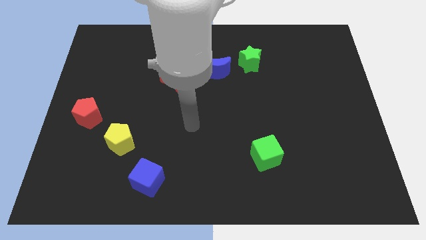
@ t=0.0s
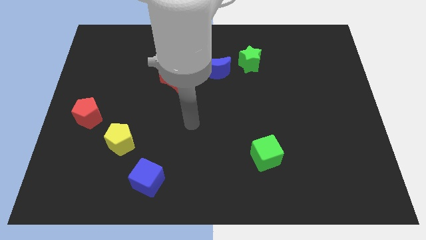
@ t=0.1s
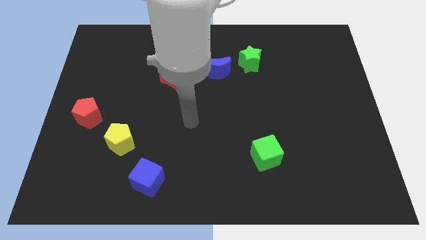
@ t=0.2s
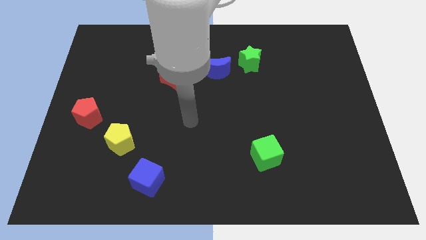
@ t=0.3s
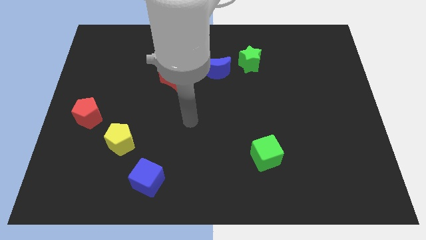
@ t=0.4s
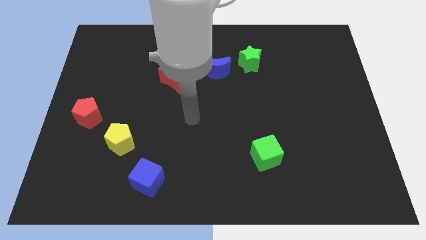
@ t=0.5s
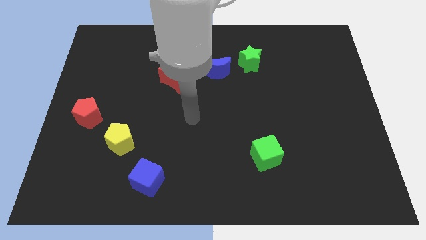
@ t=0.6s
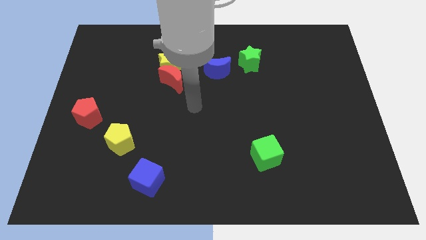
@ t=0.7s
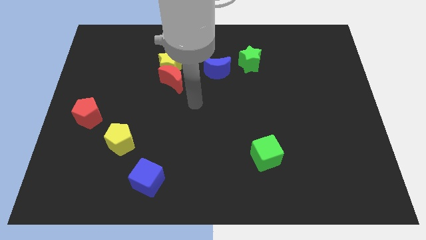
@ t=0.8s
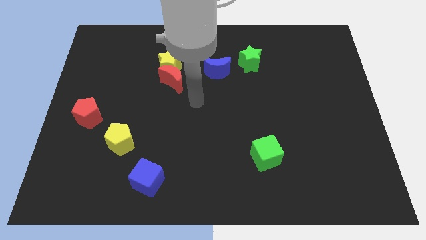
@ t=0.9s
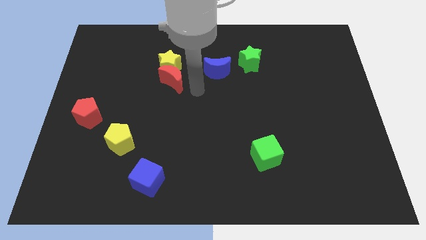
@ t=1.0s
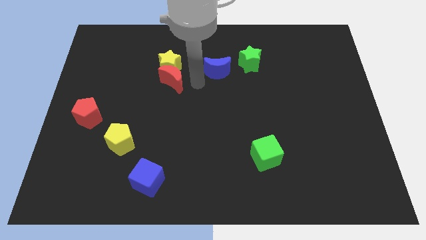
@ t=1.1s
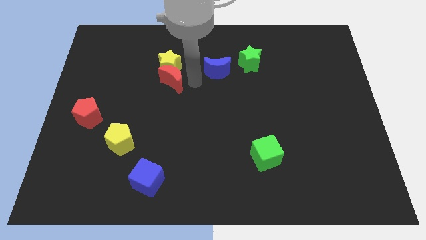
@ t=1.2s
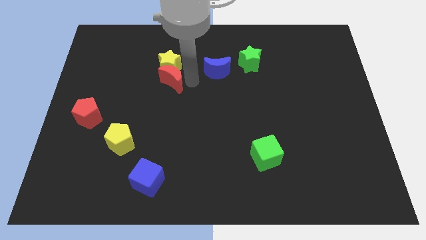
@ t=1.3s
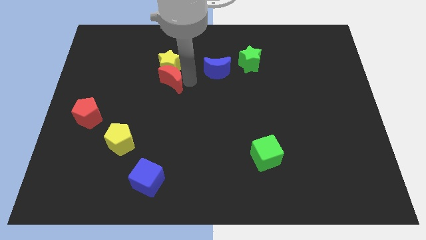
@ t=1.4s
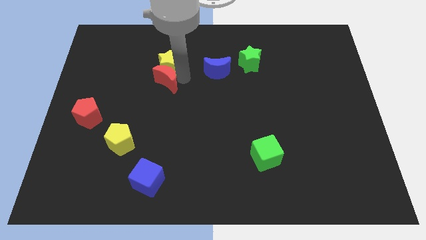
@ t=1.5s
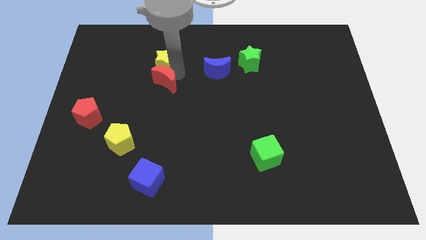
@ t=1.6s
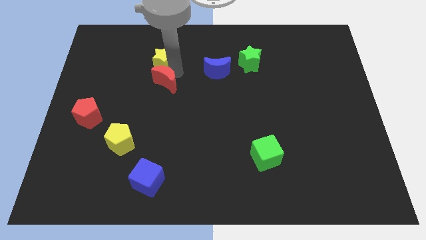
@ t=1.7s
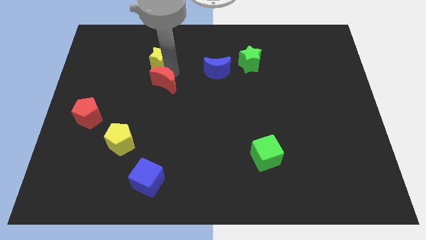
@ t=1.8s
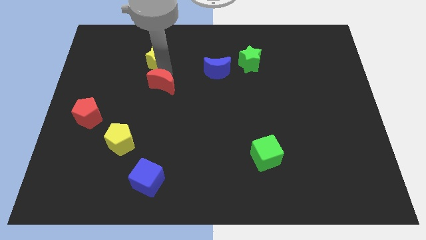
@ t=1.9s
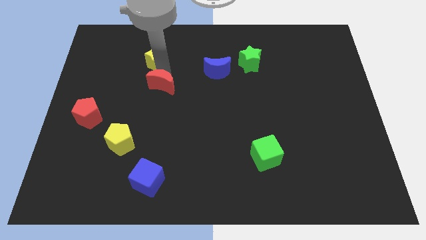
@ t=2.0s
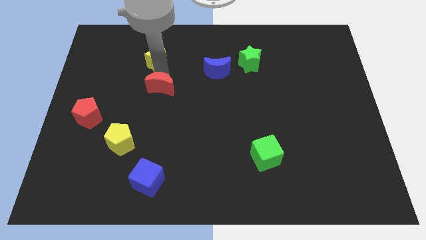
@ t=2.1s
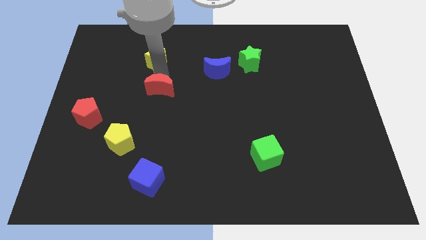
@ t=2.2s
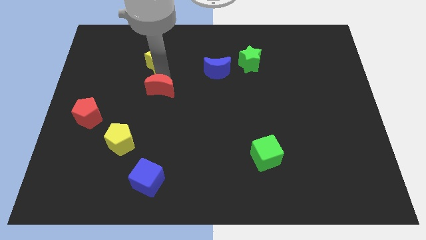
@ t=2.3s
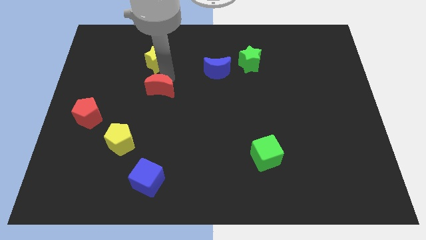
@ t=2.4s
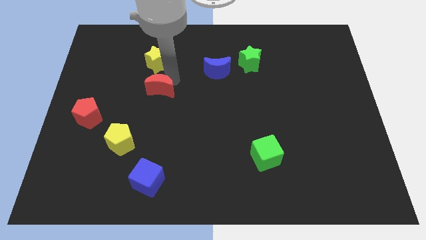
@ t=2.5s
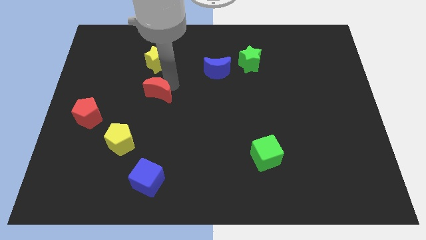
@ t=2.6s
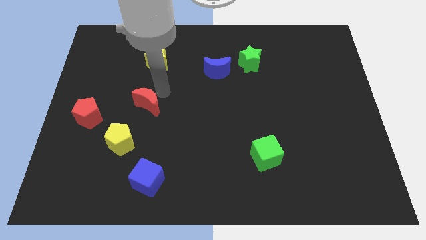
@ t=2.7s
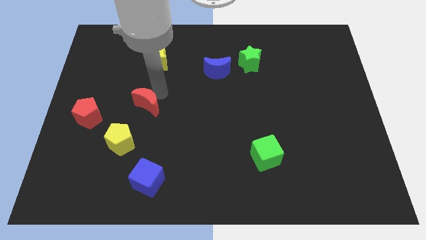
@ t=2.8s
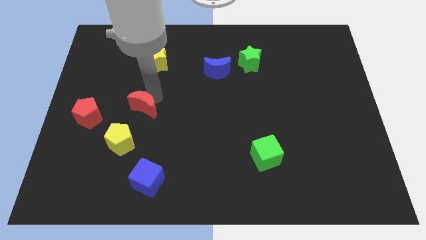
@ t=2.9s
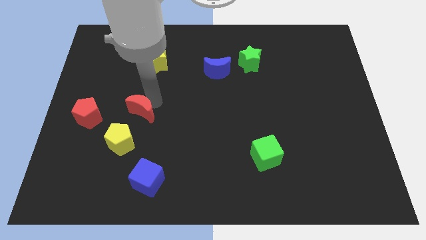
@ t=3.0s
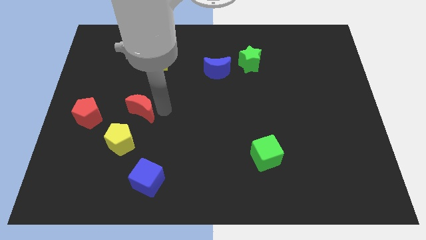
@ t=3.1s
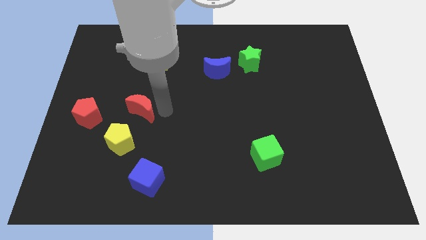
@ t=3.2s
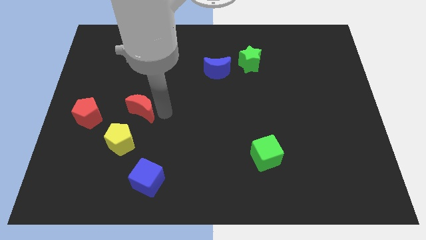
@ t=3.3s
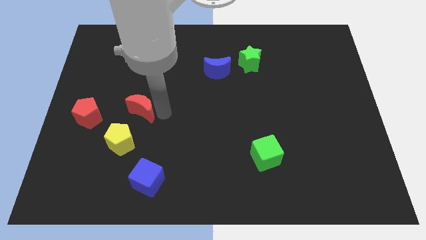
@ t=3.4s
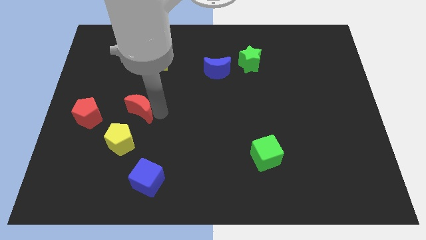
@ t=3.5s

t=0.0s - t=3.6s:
move red crescent towards the yellow pentagon

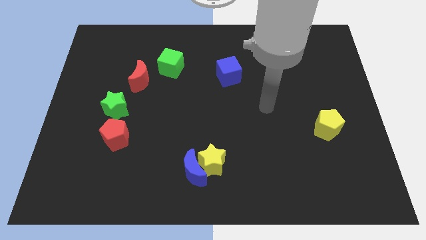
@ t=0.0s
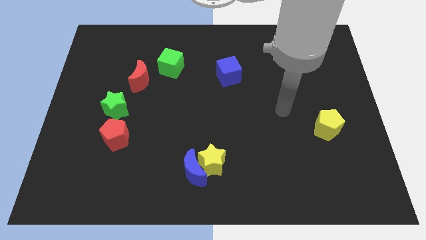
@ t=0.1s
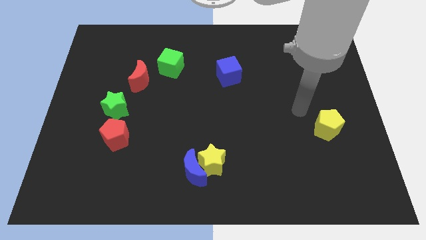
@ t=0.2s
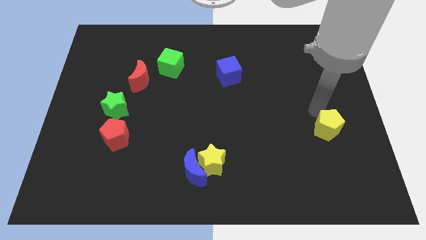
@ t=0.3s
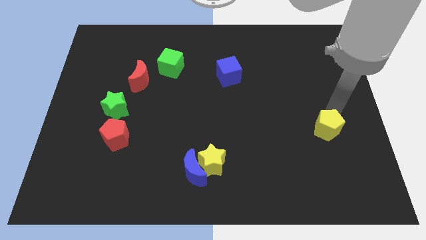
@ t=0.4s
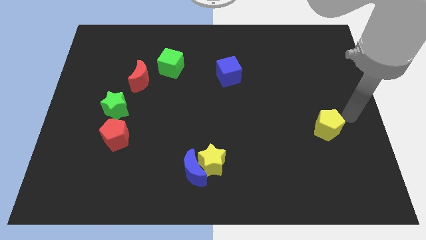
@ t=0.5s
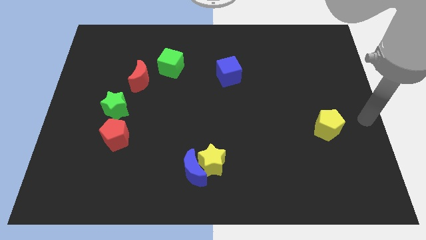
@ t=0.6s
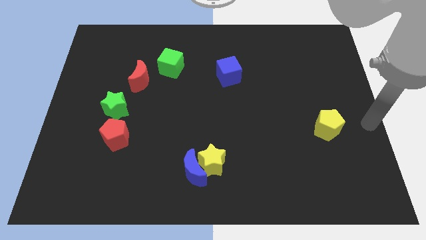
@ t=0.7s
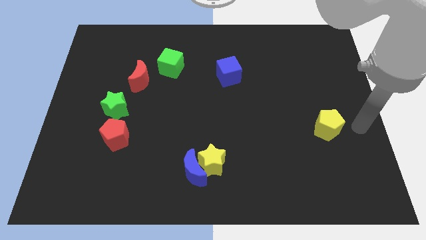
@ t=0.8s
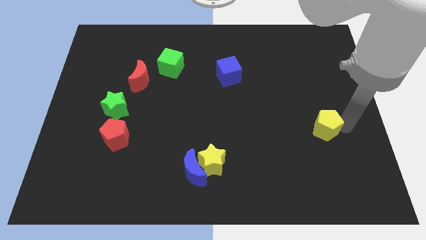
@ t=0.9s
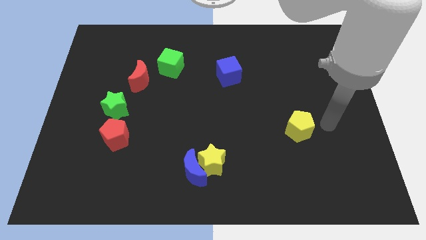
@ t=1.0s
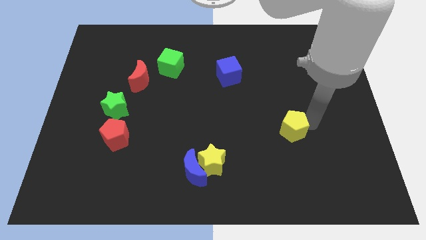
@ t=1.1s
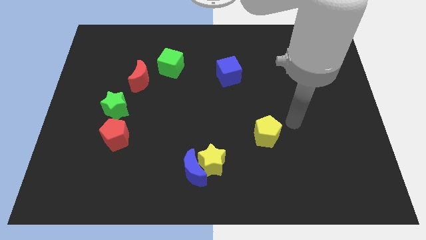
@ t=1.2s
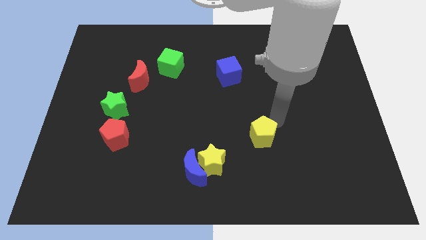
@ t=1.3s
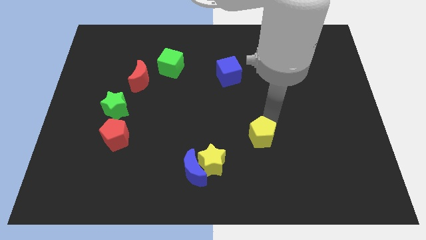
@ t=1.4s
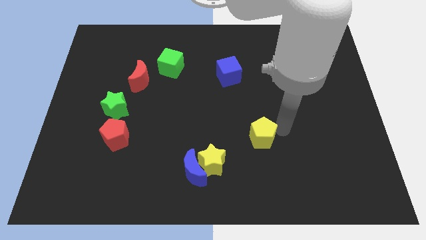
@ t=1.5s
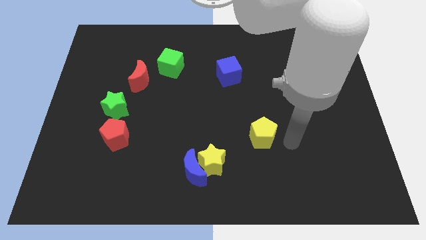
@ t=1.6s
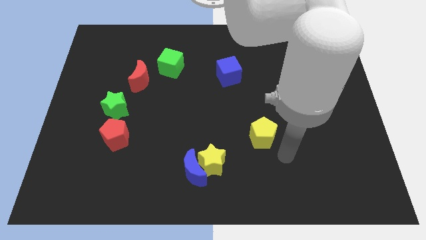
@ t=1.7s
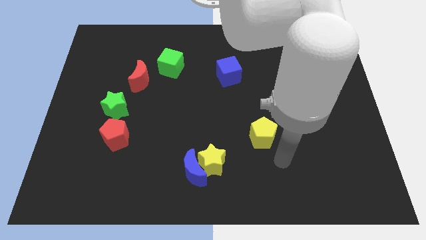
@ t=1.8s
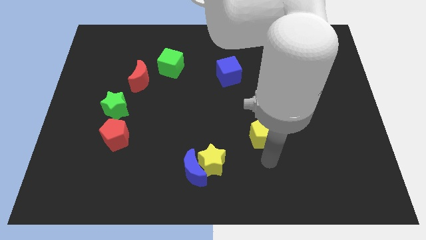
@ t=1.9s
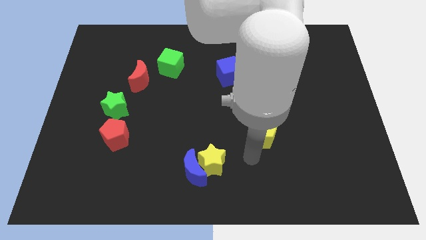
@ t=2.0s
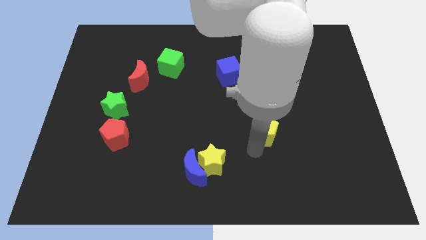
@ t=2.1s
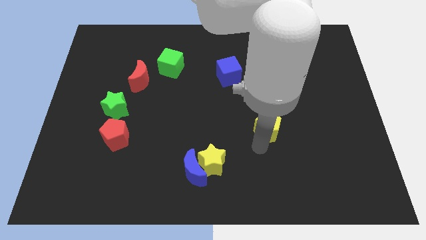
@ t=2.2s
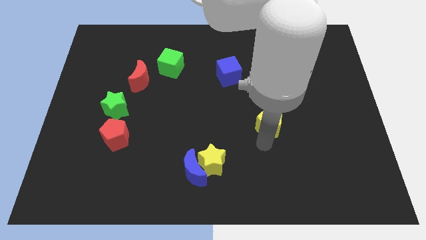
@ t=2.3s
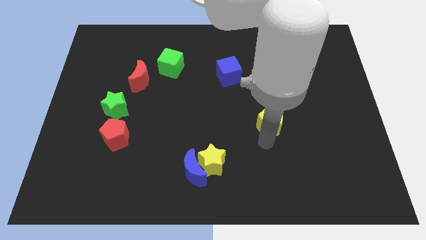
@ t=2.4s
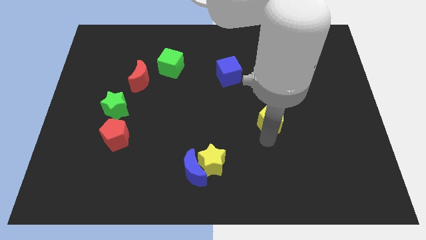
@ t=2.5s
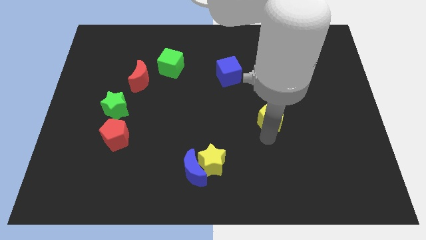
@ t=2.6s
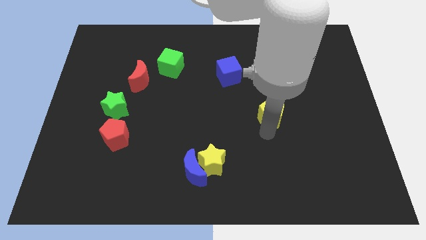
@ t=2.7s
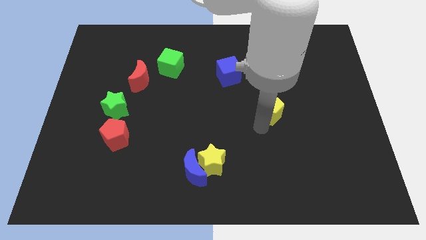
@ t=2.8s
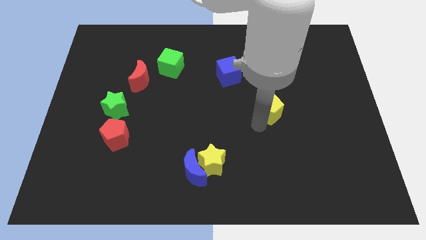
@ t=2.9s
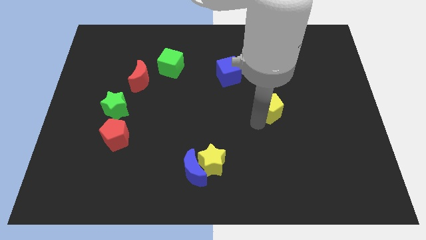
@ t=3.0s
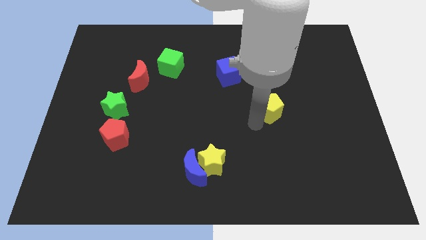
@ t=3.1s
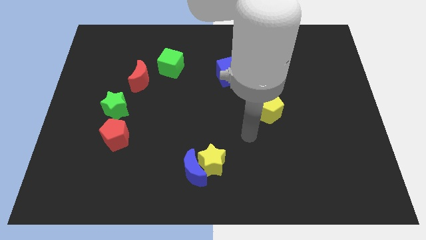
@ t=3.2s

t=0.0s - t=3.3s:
push yellow pentagon diagonal to blue cube

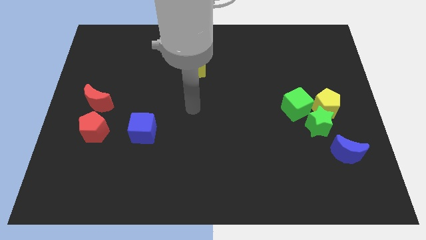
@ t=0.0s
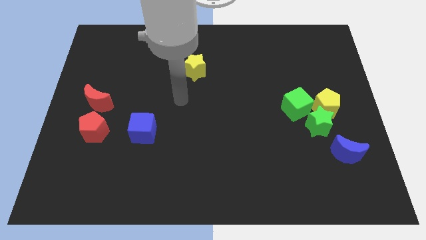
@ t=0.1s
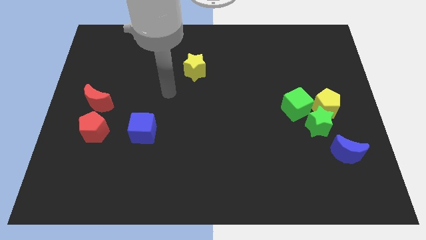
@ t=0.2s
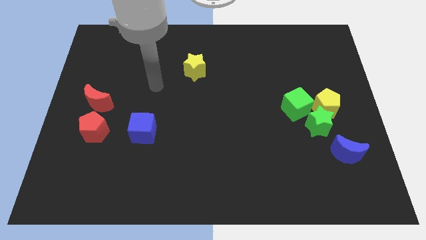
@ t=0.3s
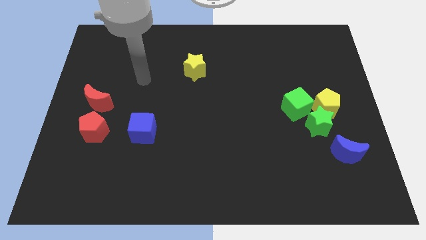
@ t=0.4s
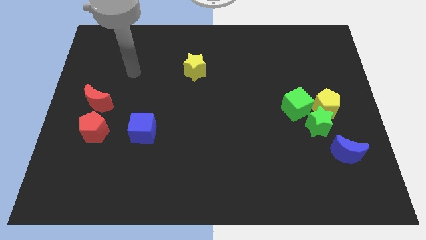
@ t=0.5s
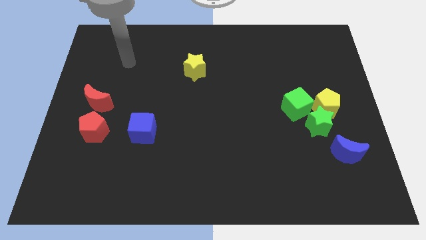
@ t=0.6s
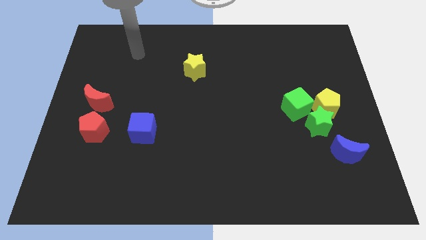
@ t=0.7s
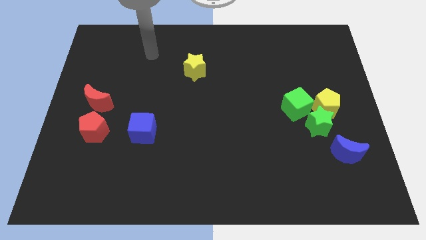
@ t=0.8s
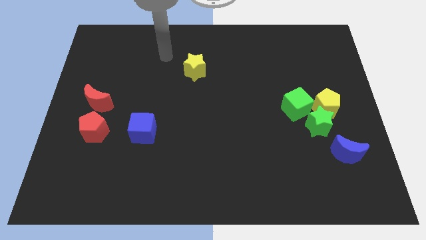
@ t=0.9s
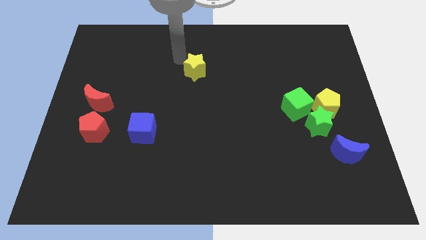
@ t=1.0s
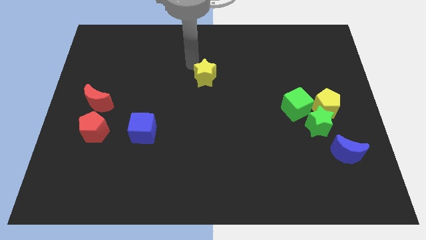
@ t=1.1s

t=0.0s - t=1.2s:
move your arm left to the yellow star

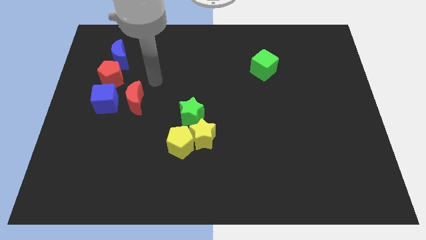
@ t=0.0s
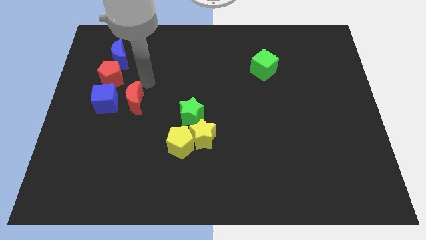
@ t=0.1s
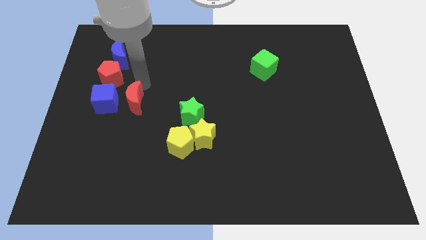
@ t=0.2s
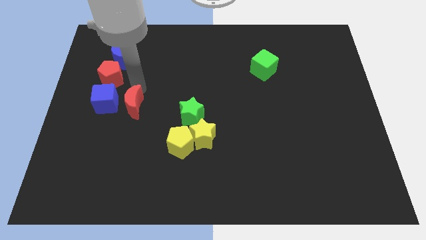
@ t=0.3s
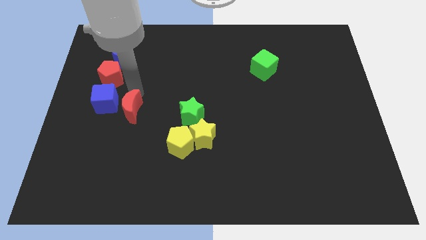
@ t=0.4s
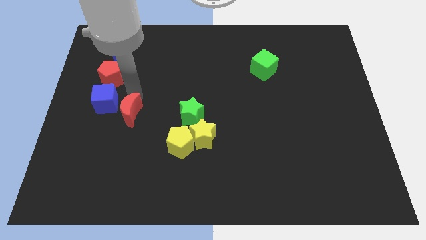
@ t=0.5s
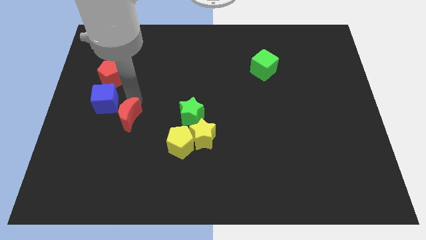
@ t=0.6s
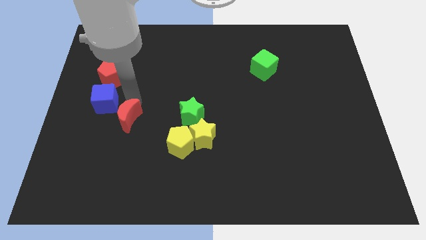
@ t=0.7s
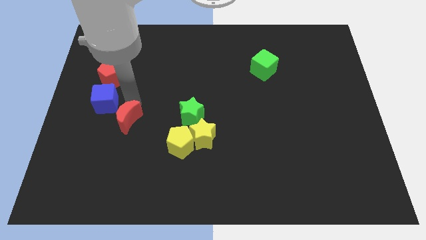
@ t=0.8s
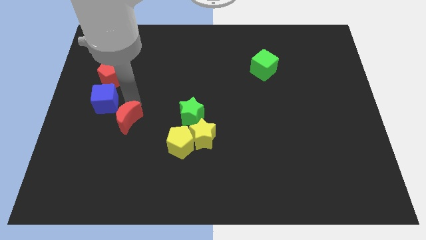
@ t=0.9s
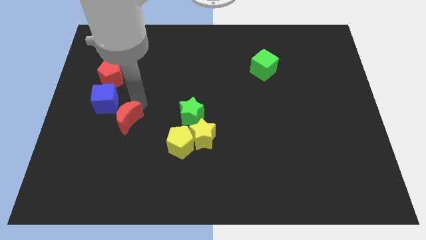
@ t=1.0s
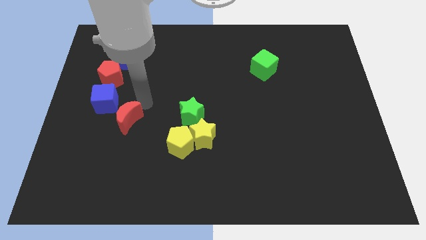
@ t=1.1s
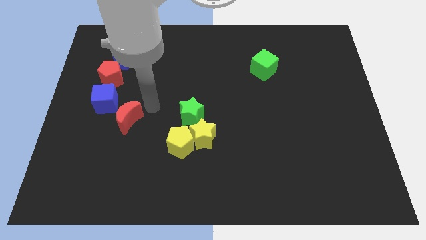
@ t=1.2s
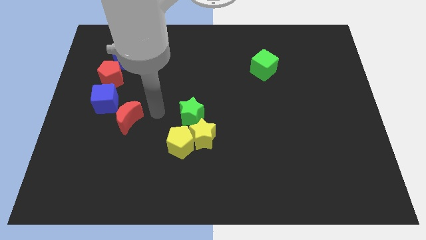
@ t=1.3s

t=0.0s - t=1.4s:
push the red moon diagonally bottom right to the blue cube
